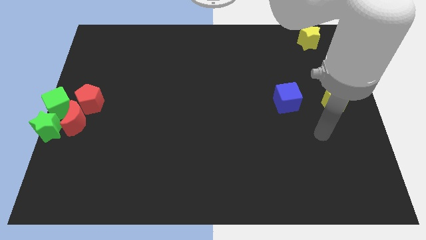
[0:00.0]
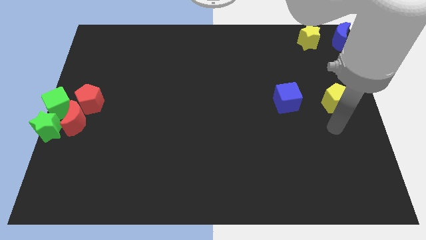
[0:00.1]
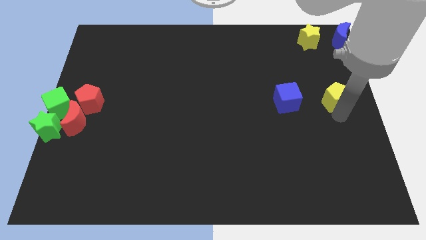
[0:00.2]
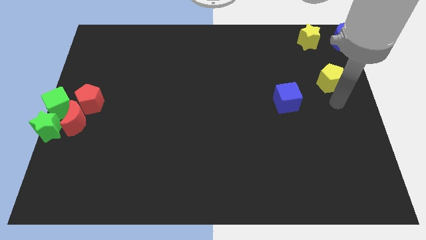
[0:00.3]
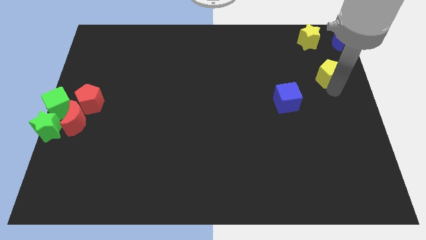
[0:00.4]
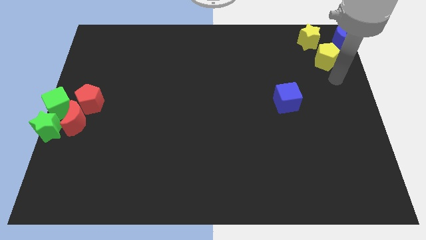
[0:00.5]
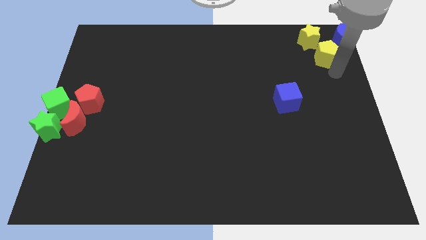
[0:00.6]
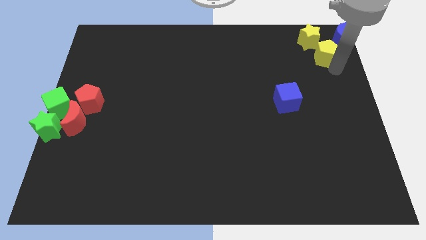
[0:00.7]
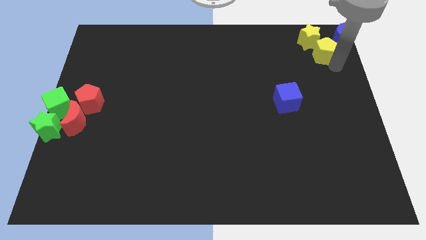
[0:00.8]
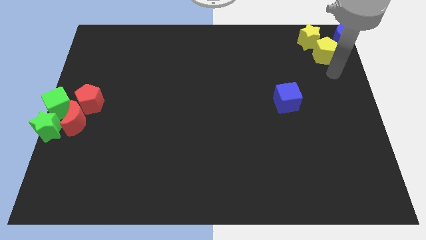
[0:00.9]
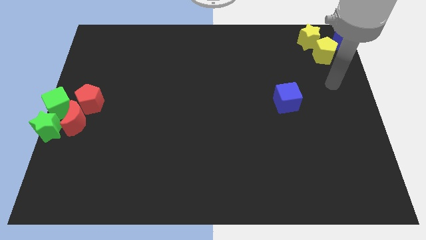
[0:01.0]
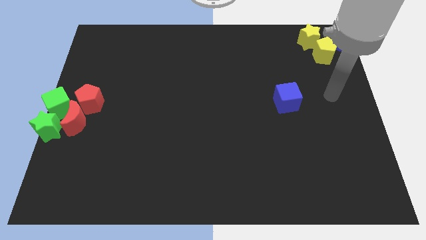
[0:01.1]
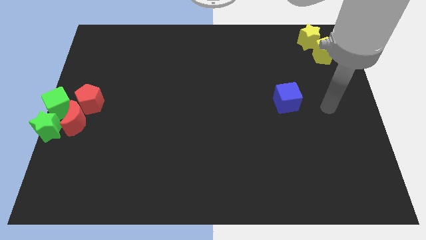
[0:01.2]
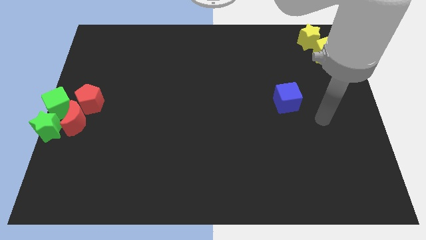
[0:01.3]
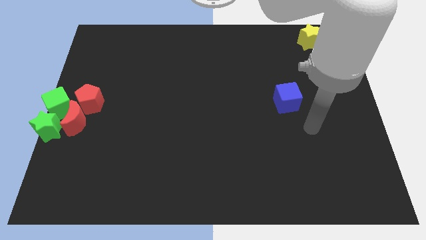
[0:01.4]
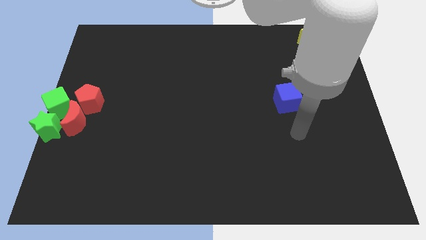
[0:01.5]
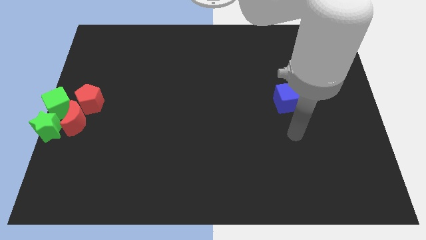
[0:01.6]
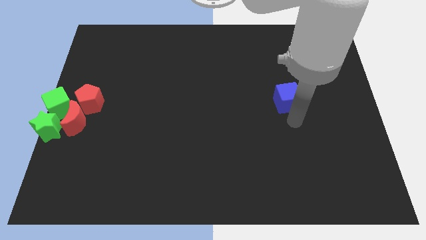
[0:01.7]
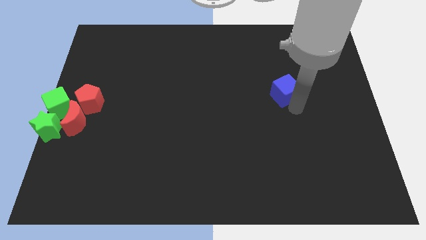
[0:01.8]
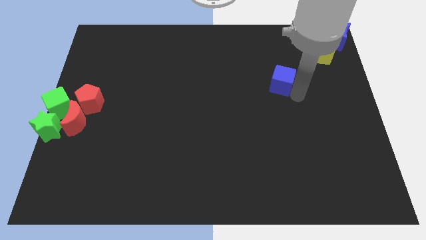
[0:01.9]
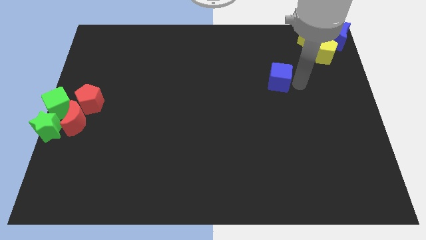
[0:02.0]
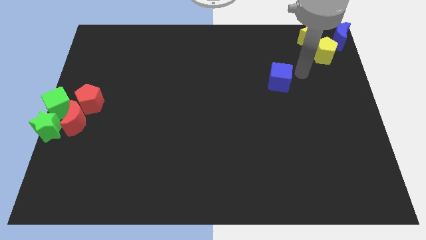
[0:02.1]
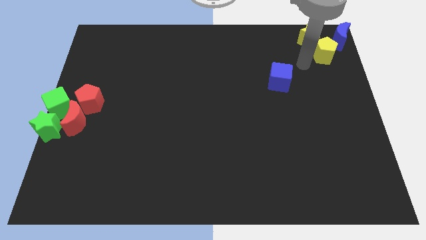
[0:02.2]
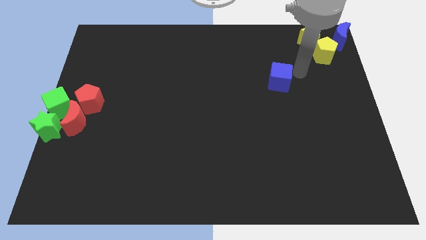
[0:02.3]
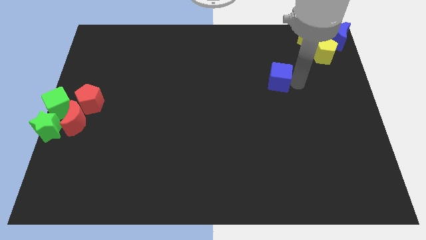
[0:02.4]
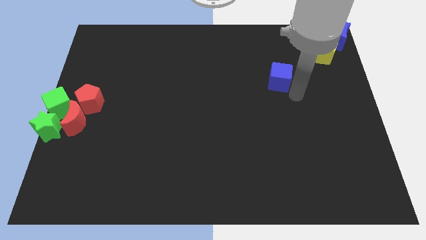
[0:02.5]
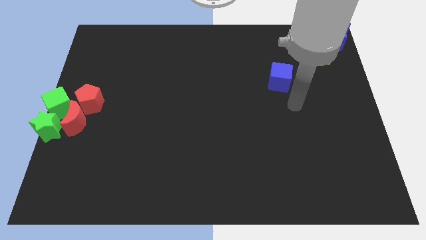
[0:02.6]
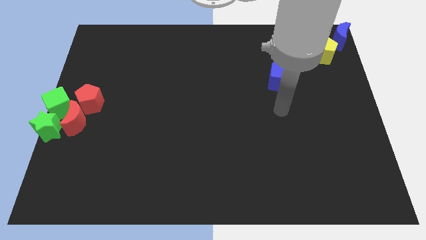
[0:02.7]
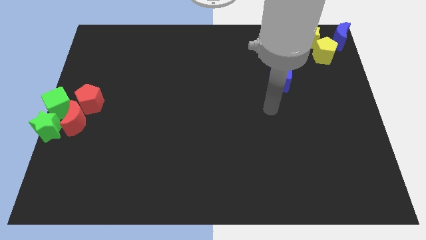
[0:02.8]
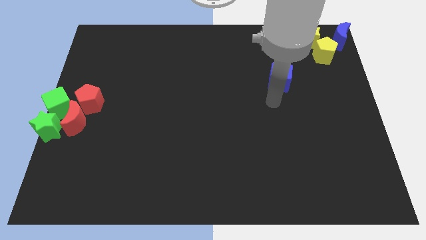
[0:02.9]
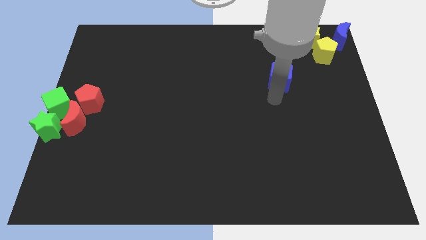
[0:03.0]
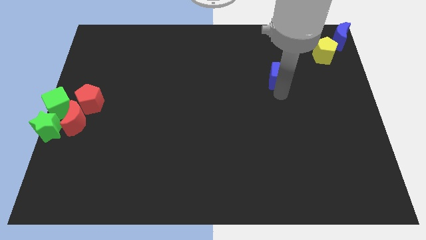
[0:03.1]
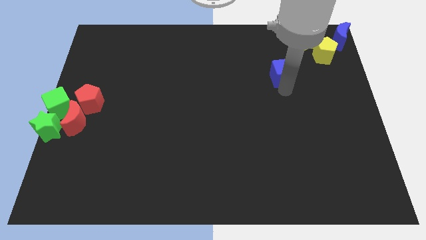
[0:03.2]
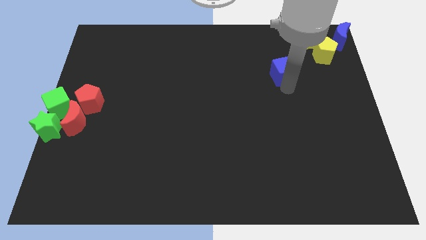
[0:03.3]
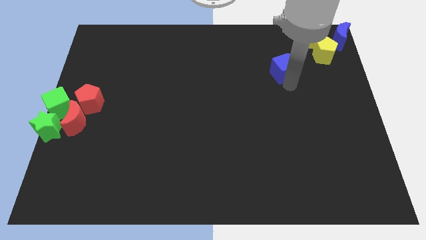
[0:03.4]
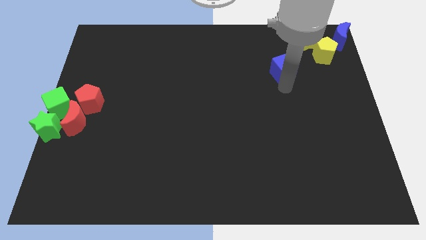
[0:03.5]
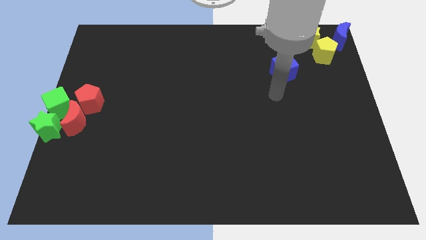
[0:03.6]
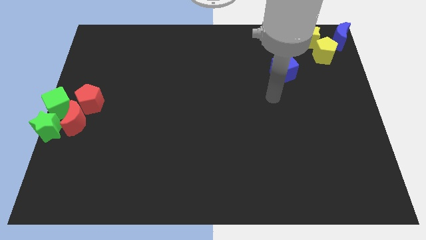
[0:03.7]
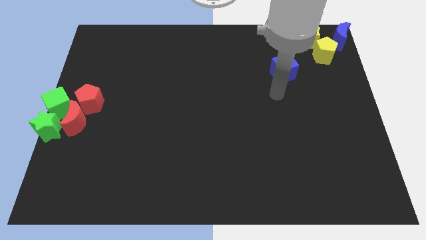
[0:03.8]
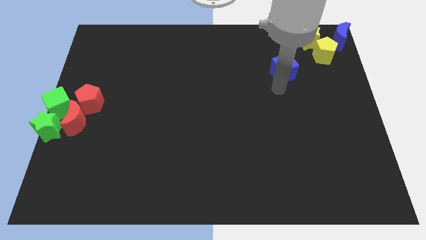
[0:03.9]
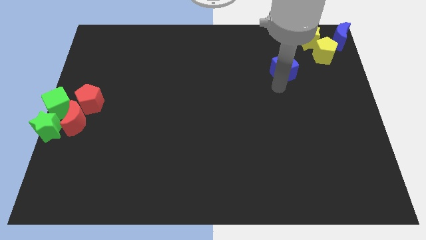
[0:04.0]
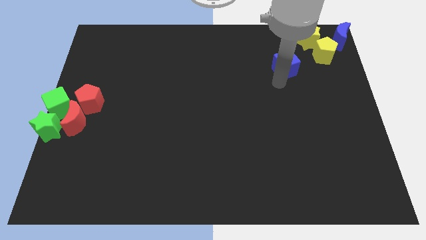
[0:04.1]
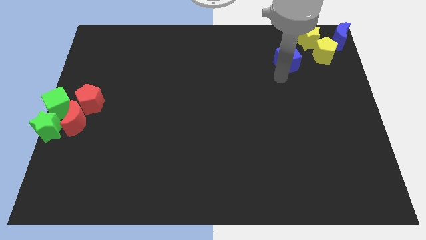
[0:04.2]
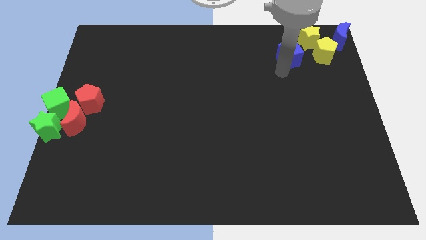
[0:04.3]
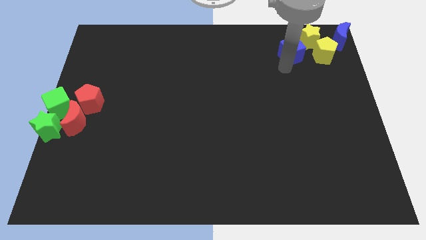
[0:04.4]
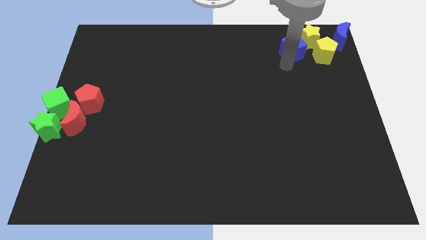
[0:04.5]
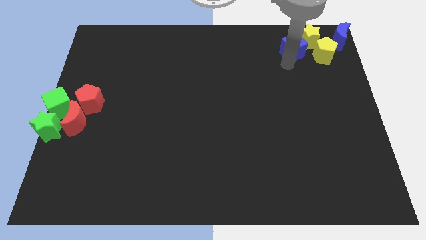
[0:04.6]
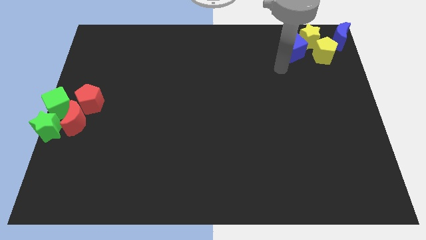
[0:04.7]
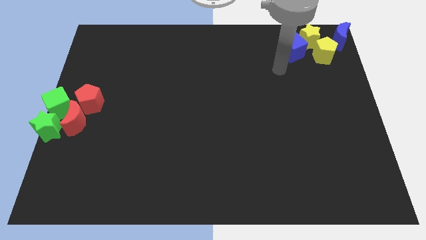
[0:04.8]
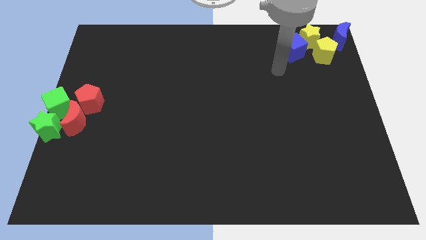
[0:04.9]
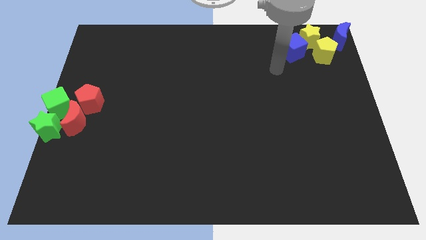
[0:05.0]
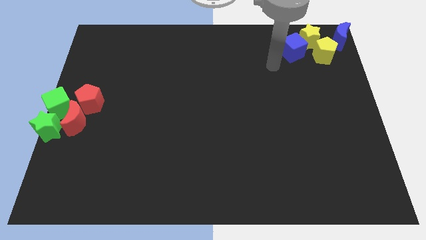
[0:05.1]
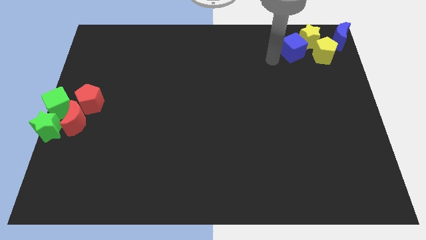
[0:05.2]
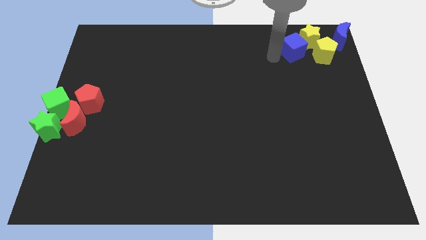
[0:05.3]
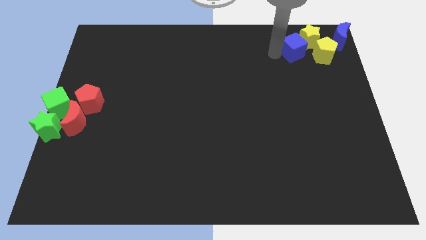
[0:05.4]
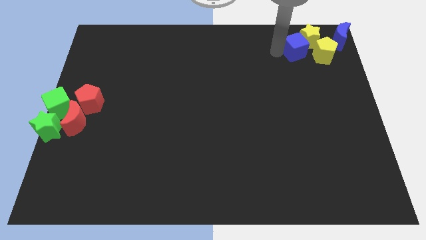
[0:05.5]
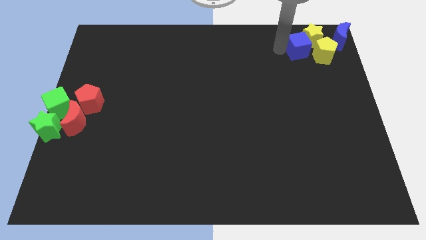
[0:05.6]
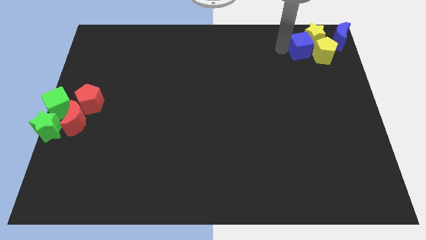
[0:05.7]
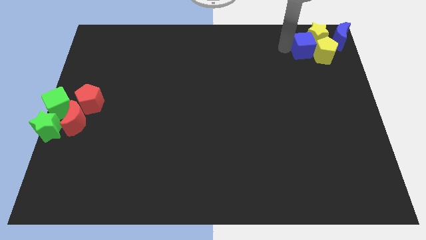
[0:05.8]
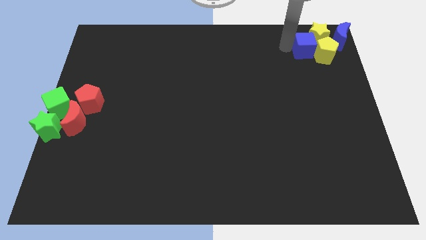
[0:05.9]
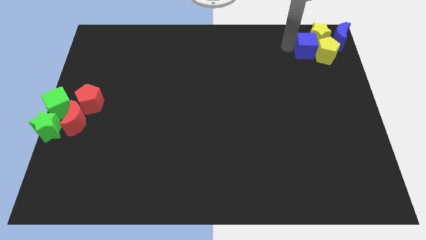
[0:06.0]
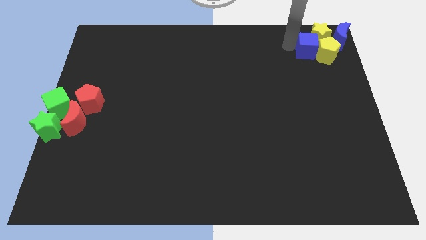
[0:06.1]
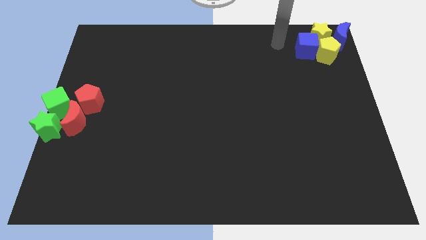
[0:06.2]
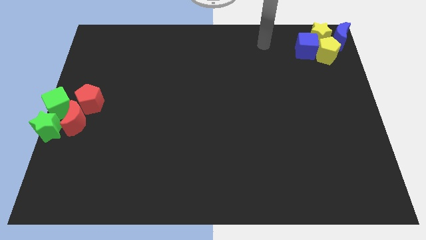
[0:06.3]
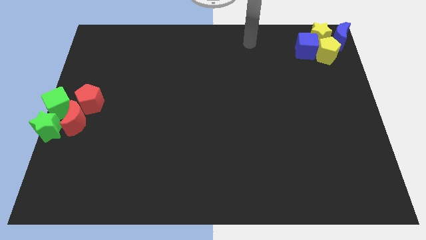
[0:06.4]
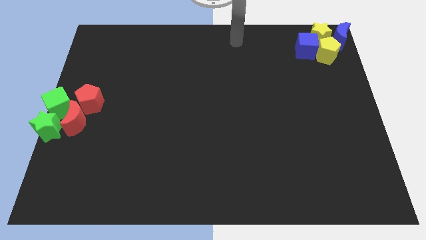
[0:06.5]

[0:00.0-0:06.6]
push the blue cube into the yellow star

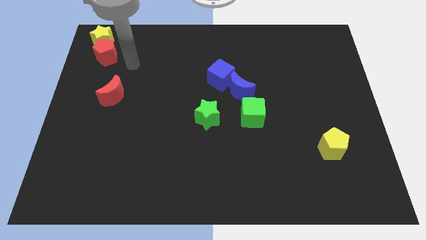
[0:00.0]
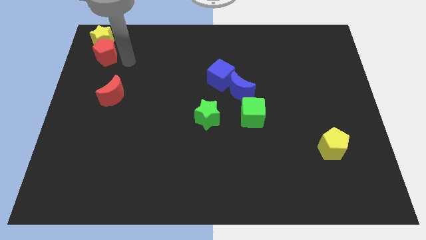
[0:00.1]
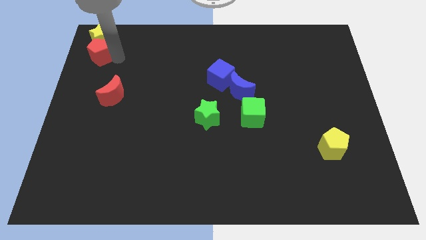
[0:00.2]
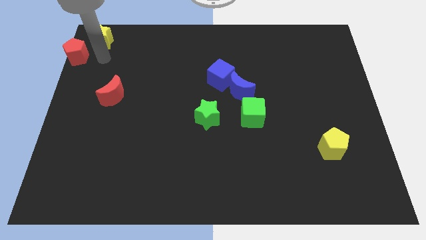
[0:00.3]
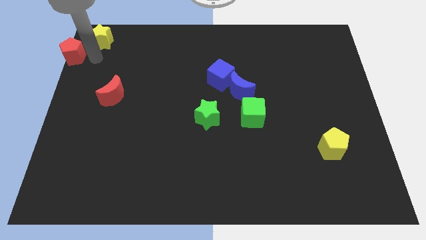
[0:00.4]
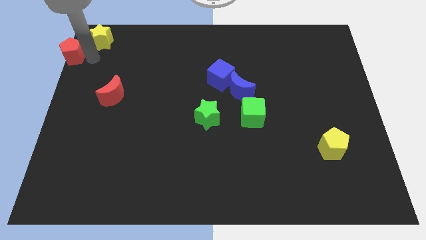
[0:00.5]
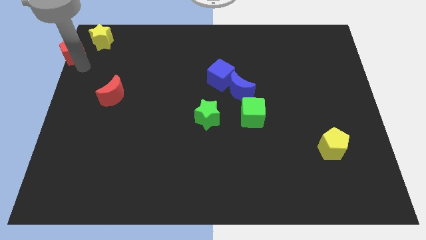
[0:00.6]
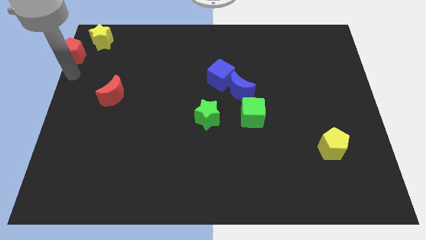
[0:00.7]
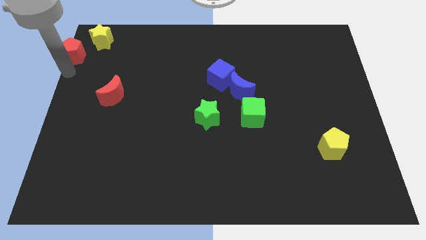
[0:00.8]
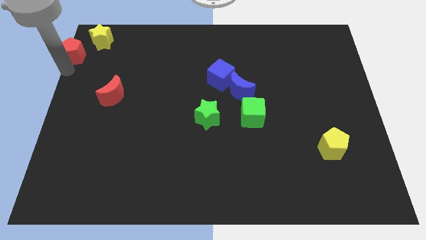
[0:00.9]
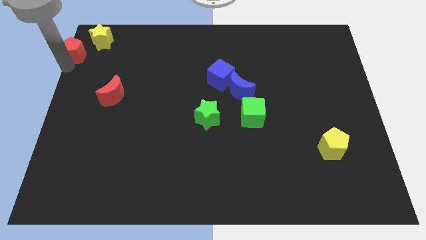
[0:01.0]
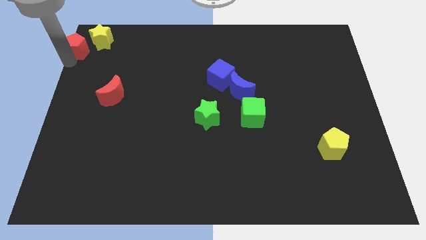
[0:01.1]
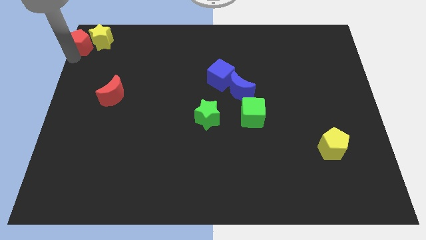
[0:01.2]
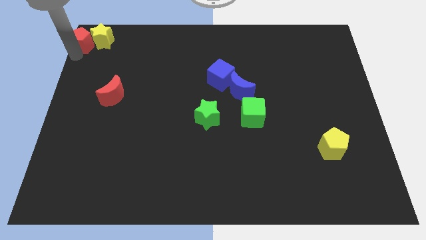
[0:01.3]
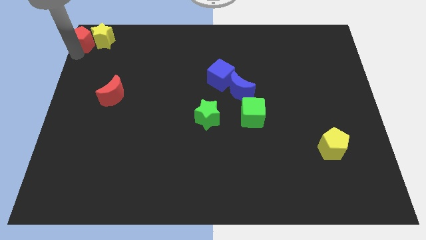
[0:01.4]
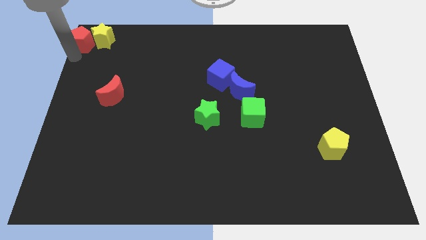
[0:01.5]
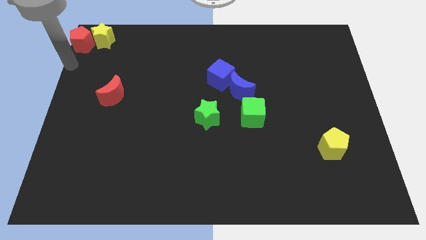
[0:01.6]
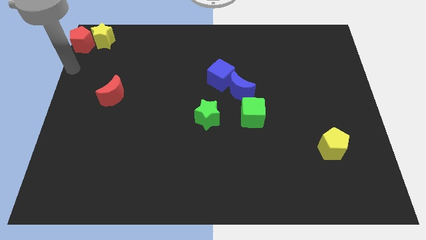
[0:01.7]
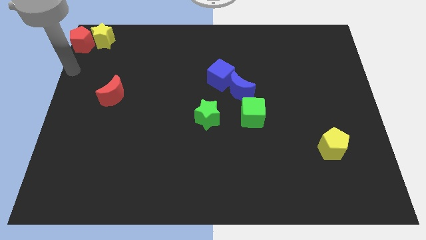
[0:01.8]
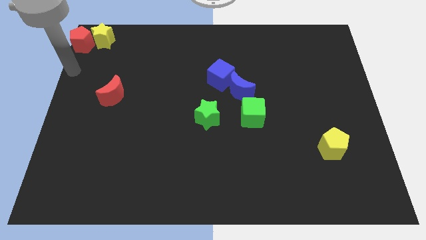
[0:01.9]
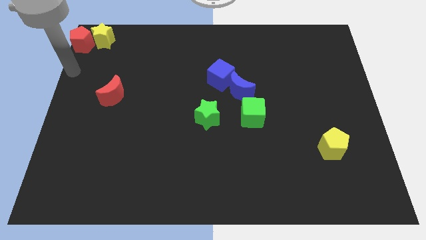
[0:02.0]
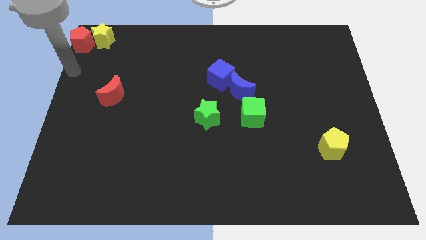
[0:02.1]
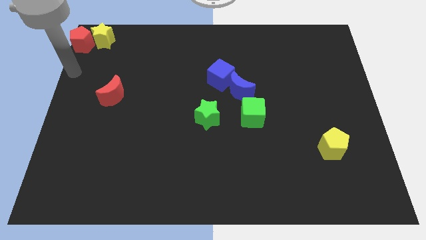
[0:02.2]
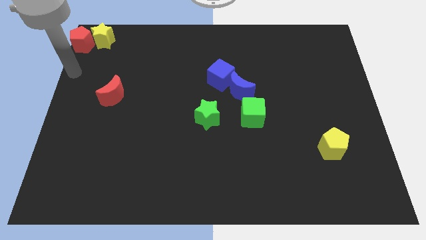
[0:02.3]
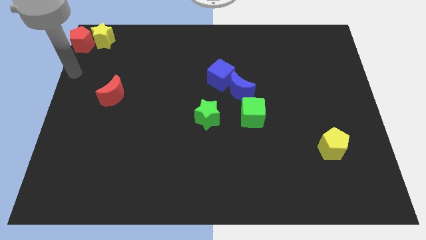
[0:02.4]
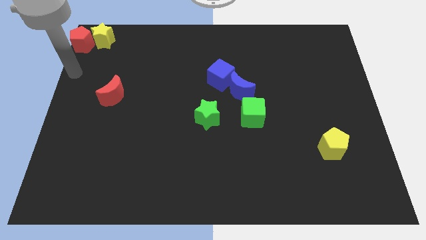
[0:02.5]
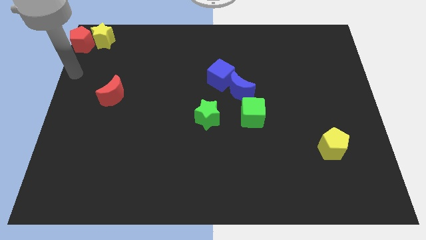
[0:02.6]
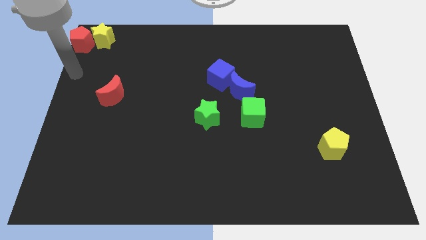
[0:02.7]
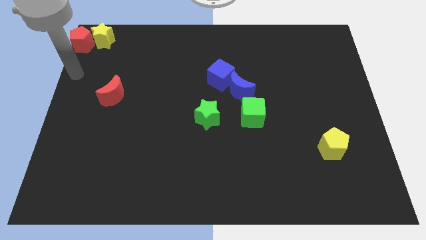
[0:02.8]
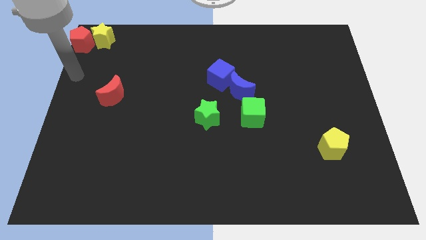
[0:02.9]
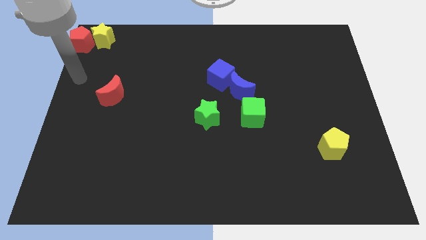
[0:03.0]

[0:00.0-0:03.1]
put the red pentagon to the left of the yellow star
